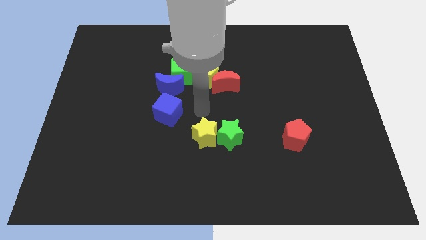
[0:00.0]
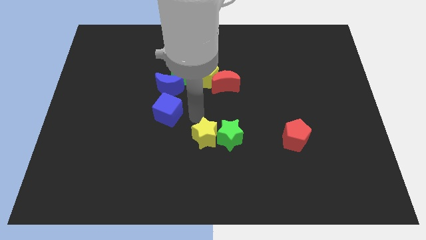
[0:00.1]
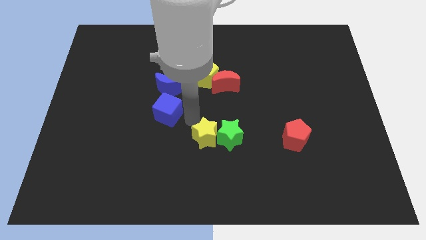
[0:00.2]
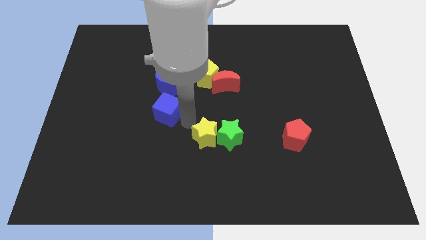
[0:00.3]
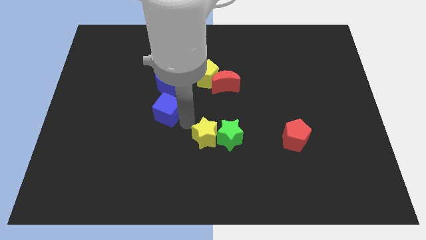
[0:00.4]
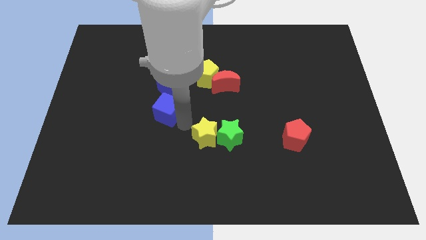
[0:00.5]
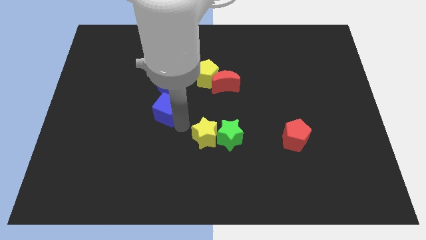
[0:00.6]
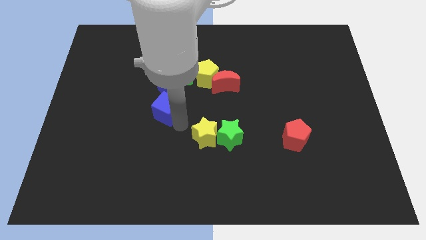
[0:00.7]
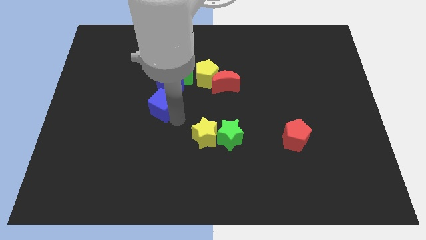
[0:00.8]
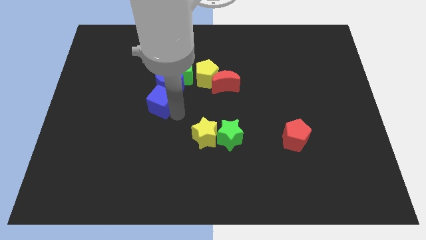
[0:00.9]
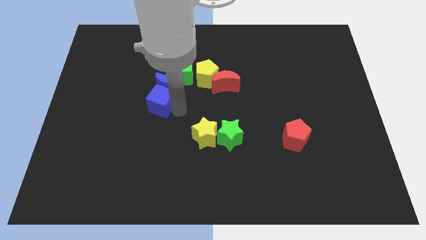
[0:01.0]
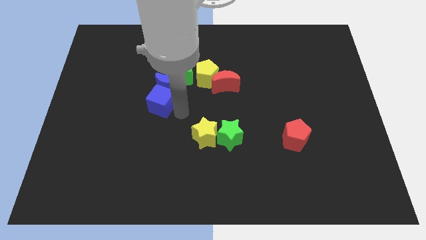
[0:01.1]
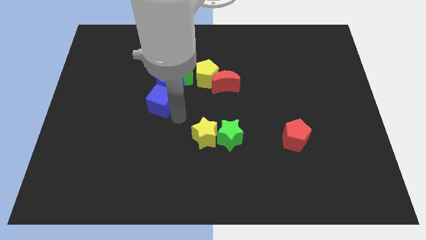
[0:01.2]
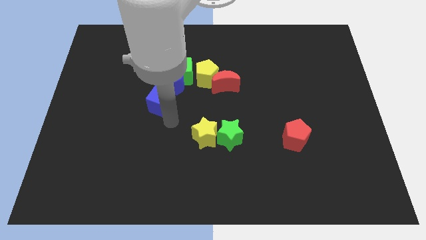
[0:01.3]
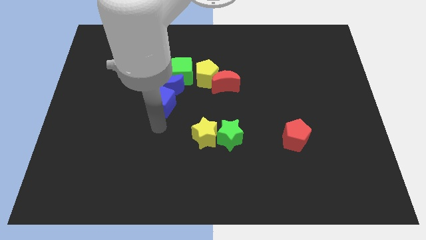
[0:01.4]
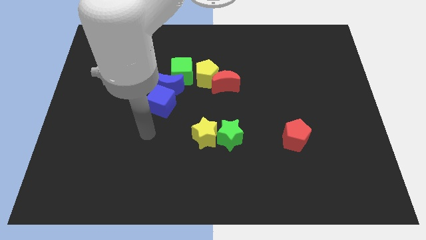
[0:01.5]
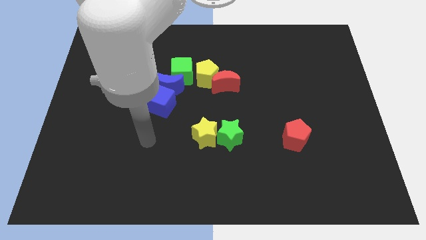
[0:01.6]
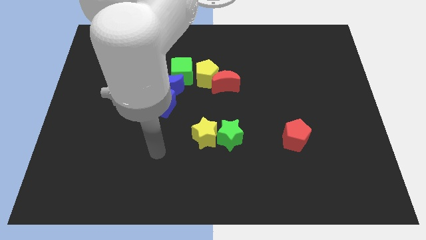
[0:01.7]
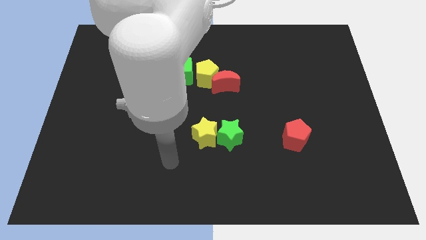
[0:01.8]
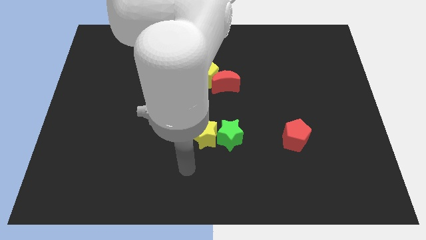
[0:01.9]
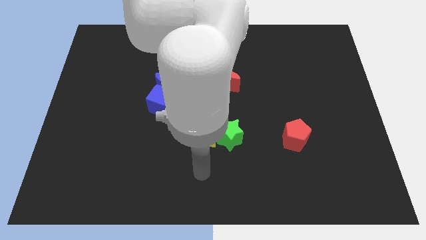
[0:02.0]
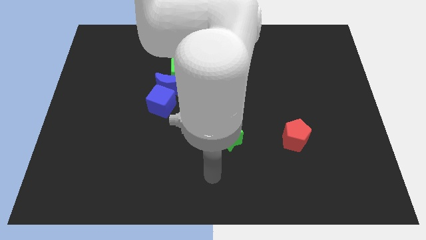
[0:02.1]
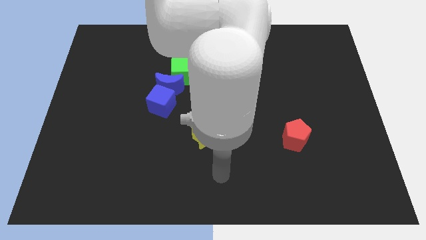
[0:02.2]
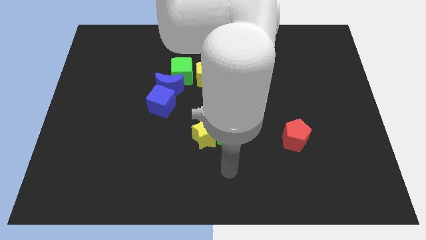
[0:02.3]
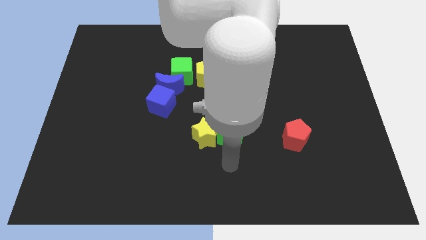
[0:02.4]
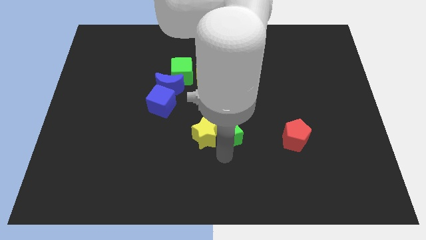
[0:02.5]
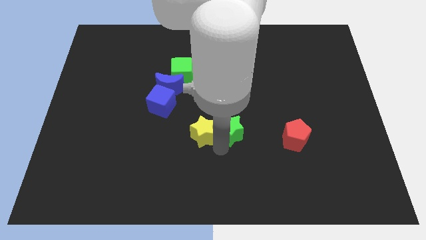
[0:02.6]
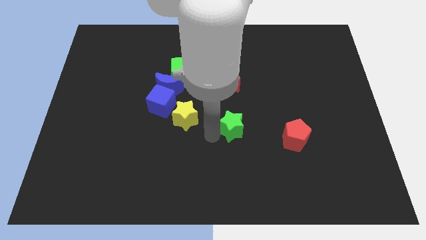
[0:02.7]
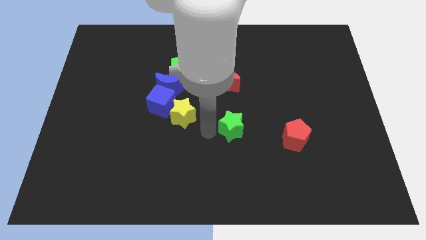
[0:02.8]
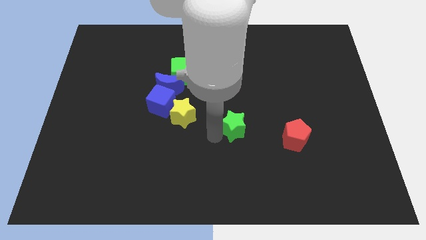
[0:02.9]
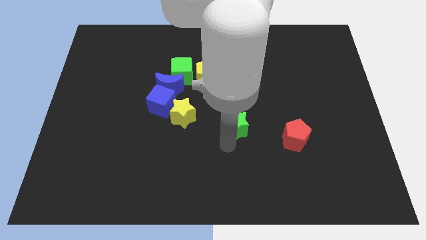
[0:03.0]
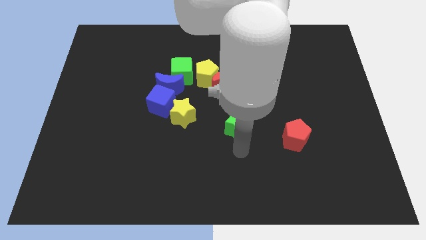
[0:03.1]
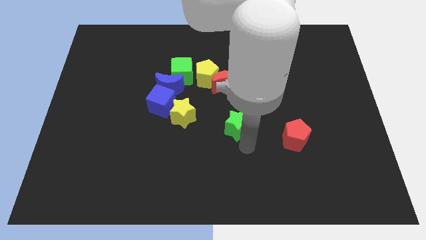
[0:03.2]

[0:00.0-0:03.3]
slide the yellow star towards the bottom right side of the blue block

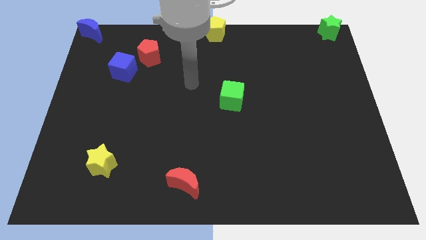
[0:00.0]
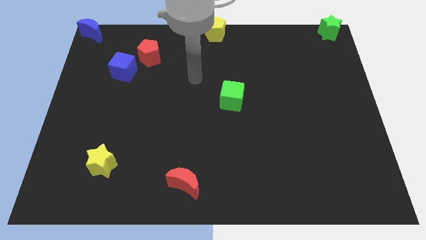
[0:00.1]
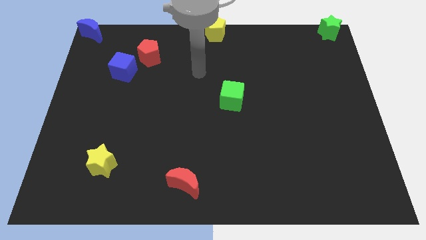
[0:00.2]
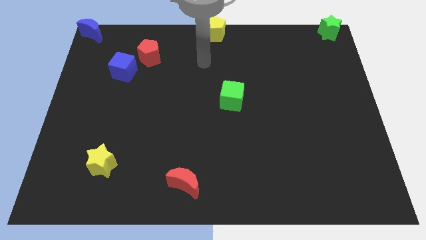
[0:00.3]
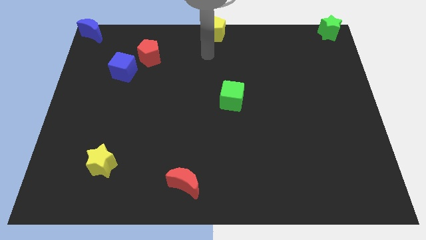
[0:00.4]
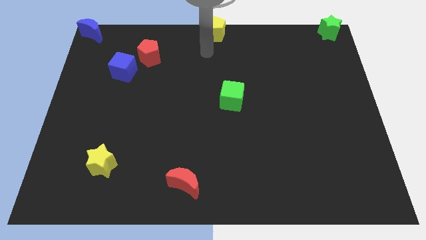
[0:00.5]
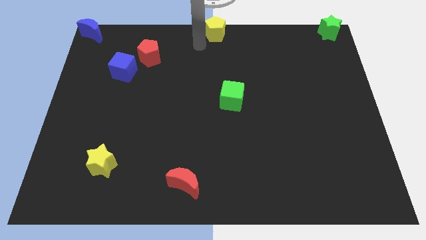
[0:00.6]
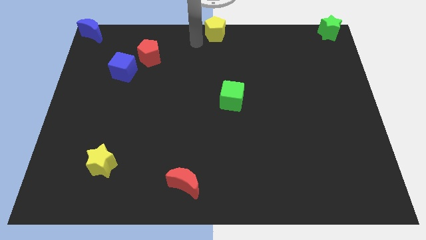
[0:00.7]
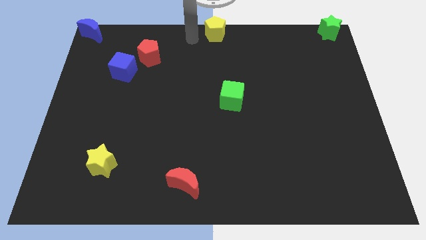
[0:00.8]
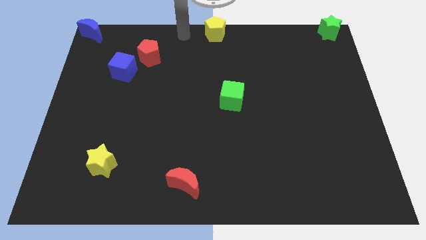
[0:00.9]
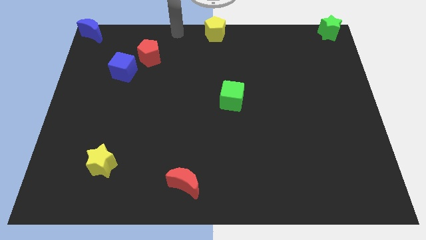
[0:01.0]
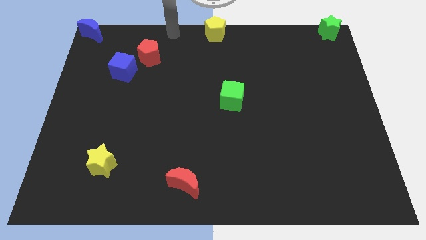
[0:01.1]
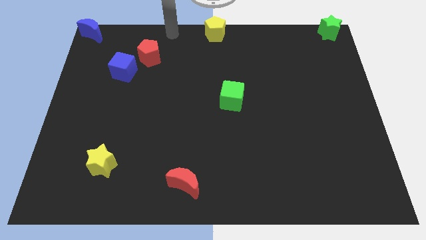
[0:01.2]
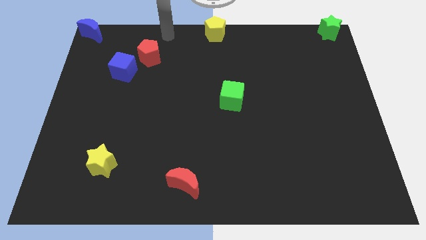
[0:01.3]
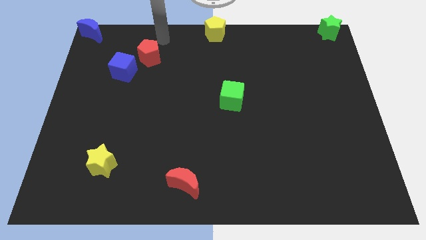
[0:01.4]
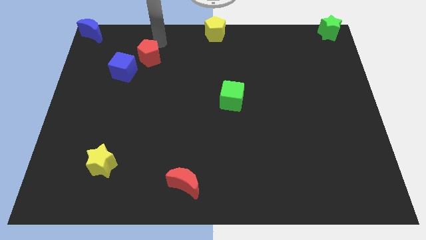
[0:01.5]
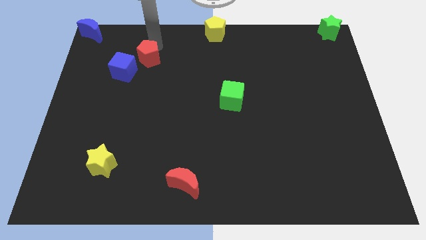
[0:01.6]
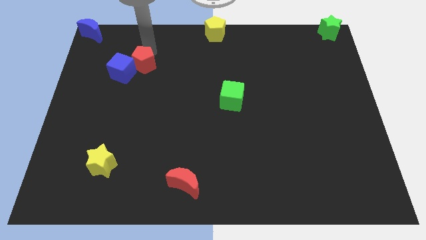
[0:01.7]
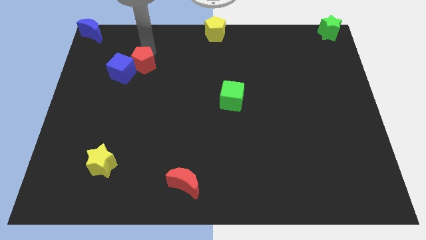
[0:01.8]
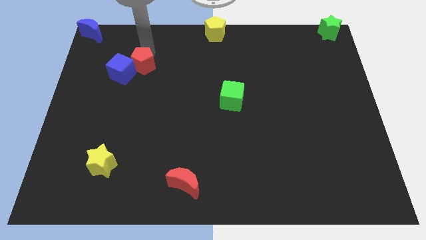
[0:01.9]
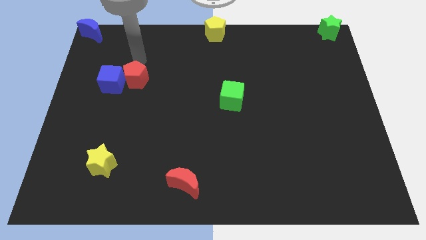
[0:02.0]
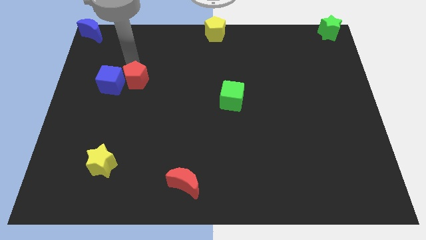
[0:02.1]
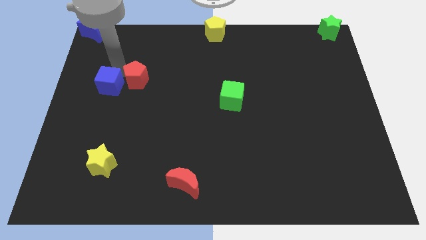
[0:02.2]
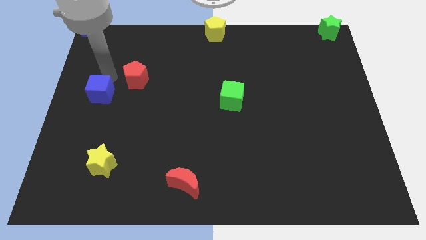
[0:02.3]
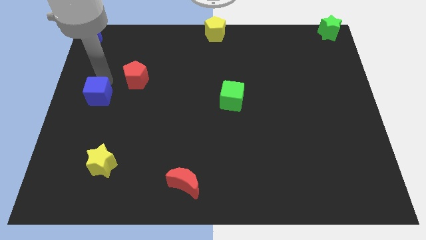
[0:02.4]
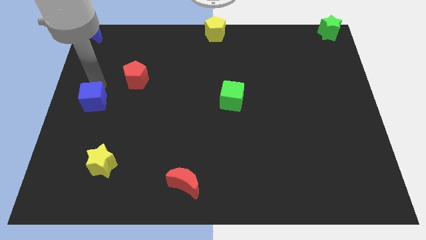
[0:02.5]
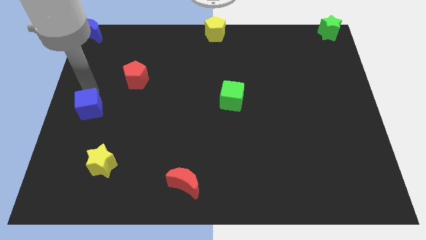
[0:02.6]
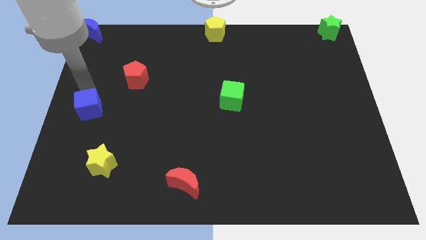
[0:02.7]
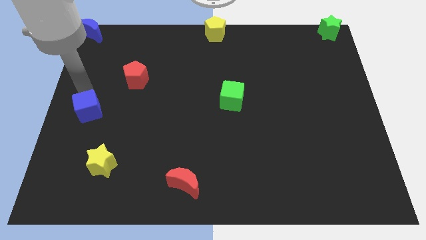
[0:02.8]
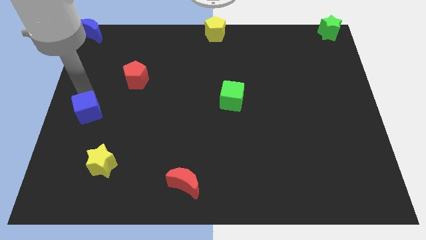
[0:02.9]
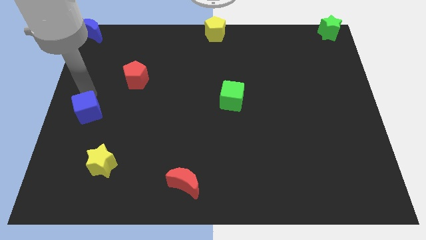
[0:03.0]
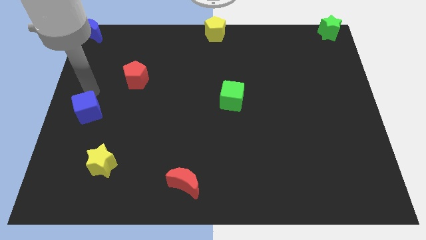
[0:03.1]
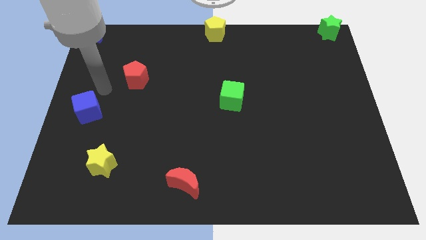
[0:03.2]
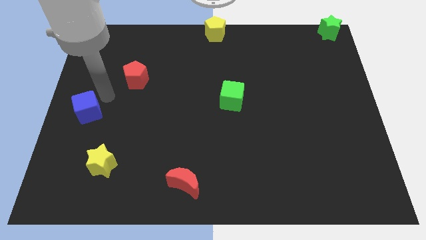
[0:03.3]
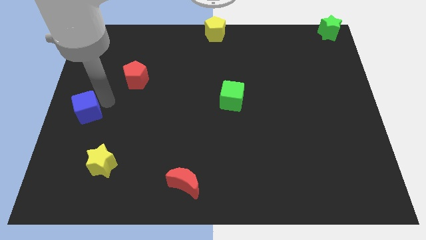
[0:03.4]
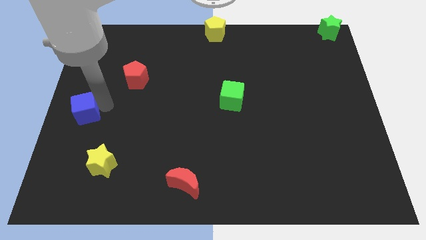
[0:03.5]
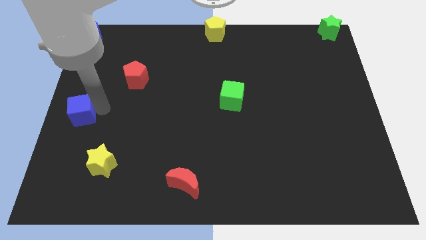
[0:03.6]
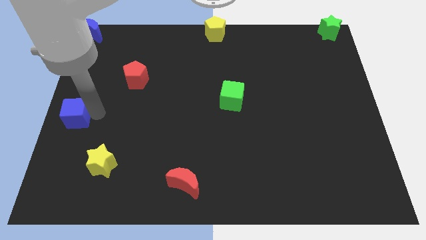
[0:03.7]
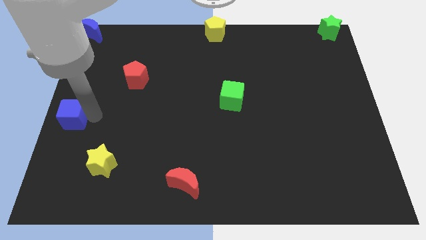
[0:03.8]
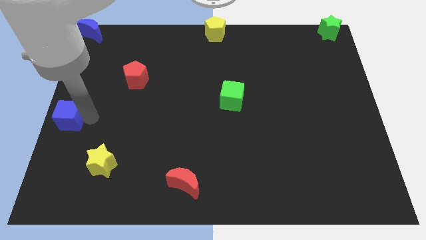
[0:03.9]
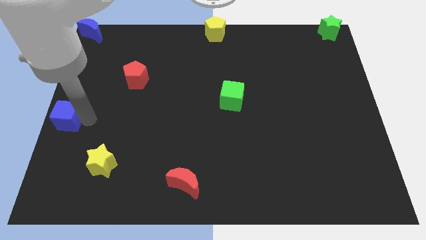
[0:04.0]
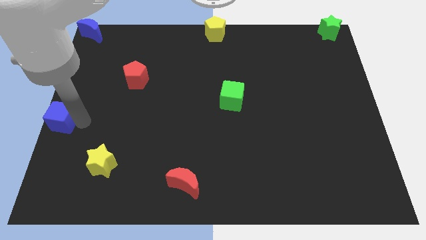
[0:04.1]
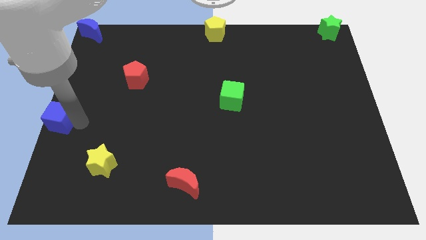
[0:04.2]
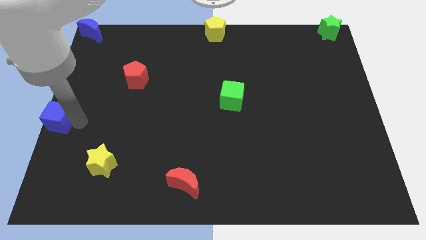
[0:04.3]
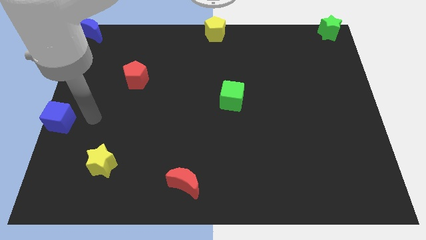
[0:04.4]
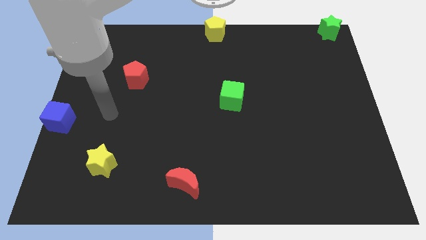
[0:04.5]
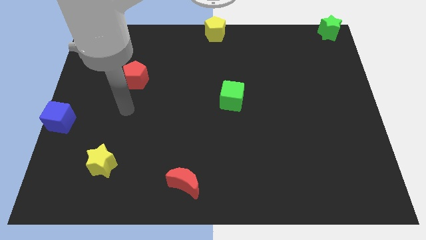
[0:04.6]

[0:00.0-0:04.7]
separate the blue cube from the red pentagon

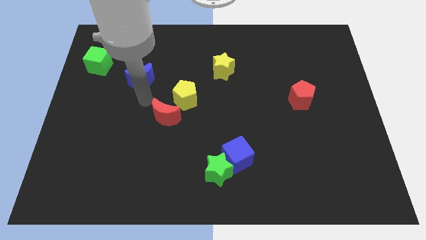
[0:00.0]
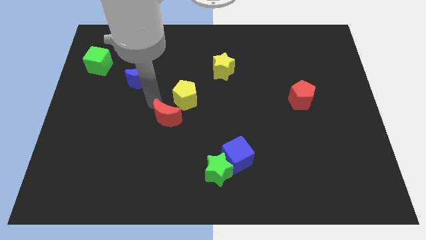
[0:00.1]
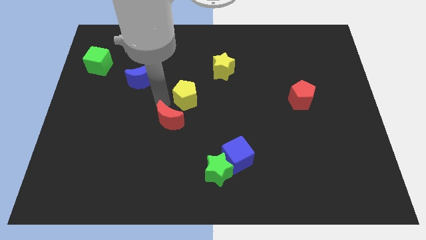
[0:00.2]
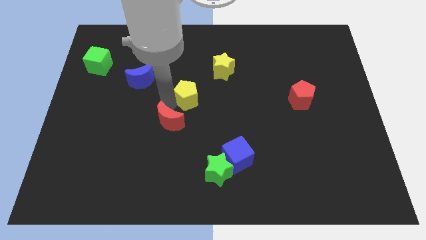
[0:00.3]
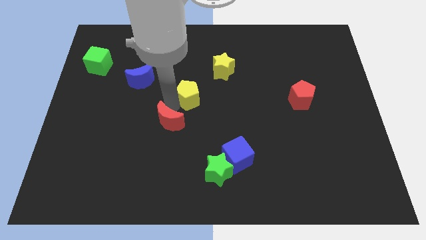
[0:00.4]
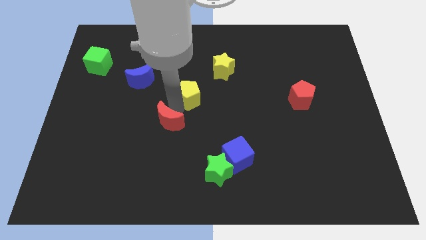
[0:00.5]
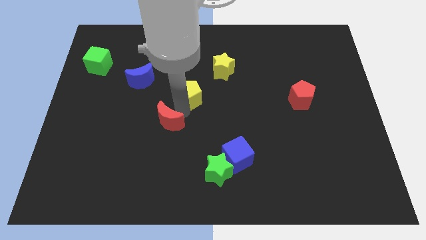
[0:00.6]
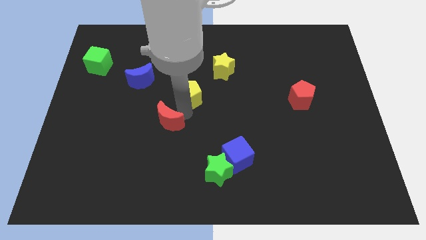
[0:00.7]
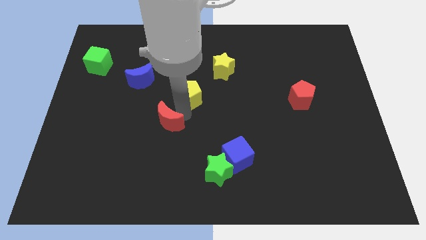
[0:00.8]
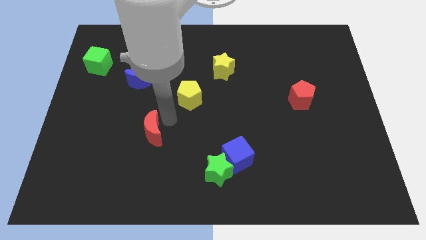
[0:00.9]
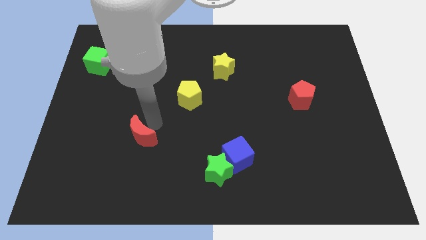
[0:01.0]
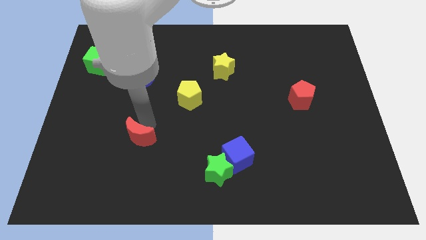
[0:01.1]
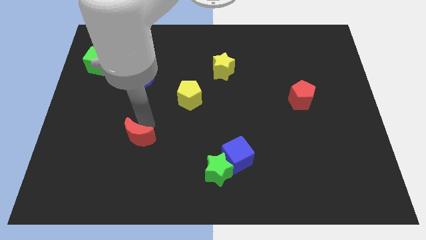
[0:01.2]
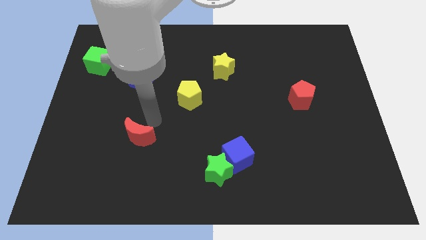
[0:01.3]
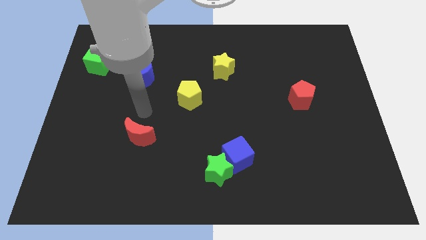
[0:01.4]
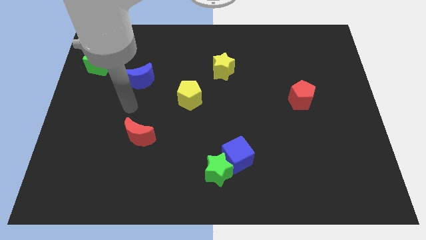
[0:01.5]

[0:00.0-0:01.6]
split yellow pentagon and red moon
